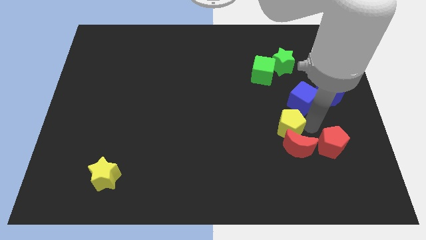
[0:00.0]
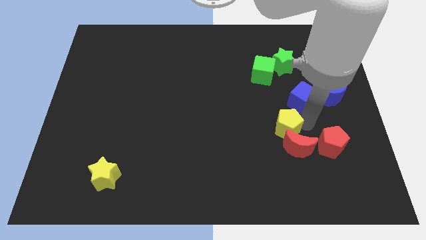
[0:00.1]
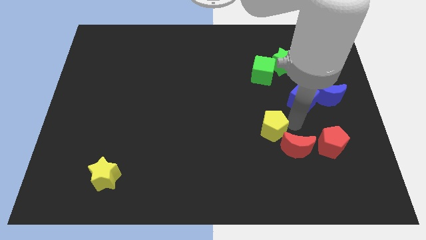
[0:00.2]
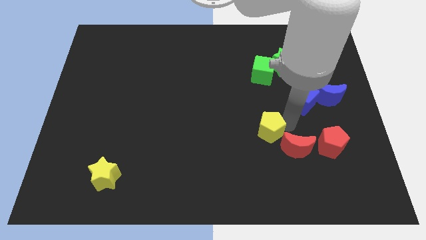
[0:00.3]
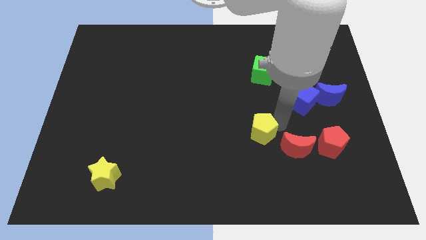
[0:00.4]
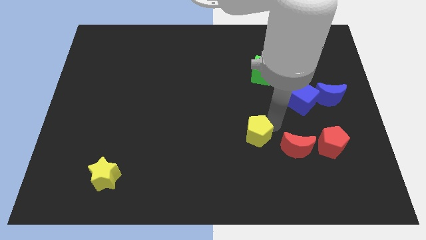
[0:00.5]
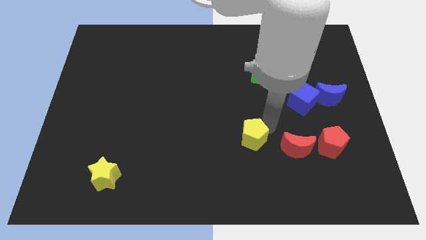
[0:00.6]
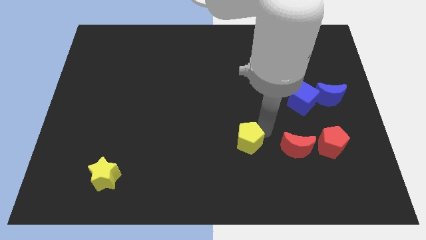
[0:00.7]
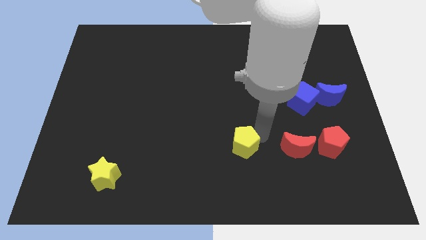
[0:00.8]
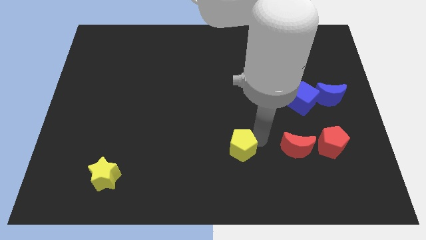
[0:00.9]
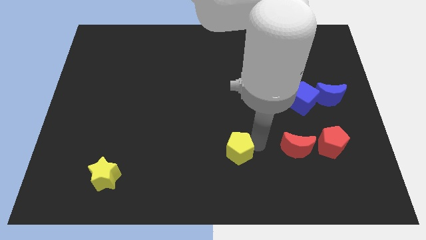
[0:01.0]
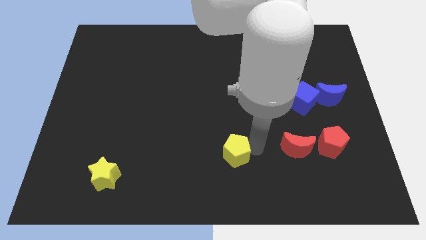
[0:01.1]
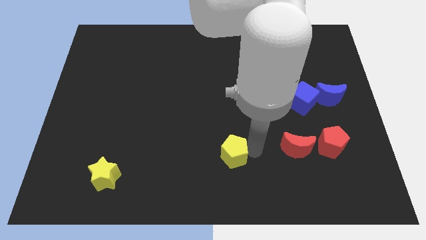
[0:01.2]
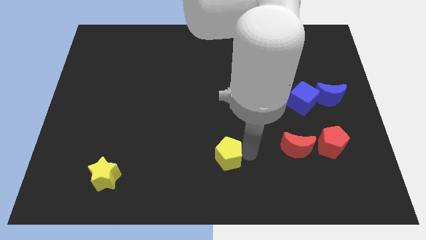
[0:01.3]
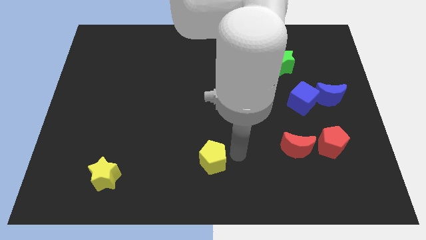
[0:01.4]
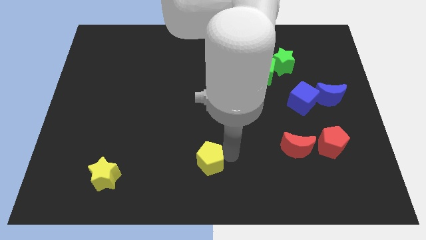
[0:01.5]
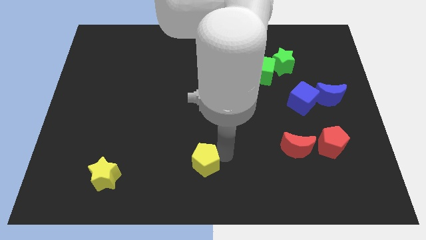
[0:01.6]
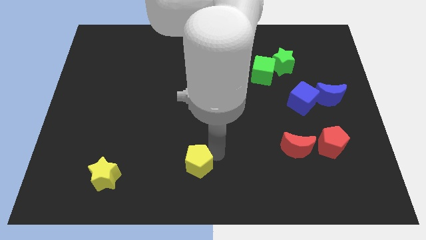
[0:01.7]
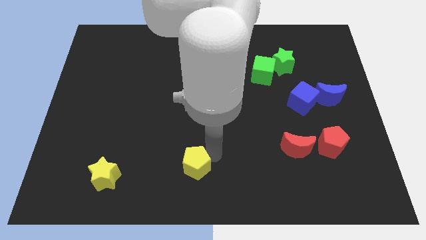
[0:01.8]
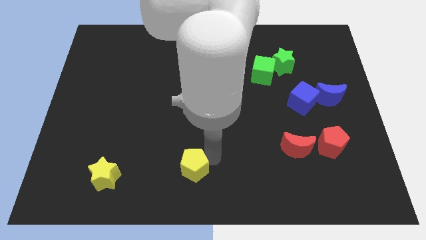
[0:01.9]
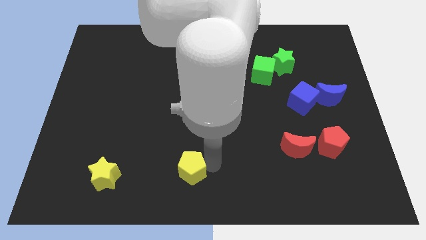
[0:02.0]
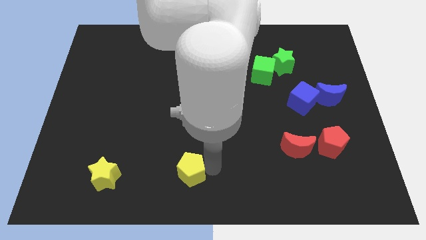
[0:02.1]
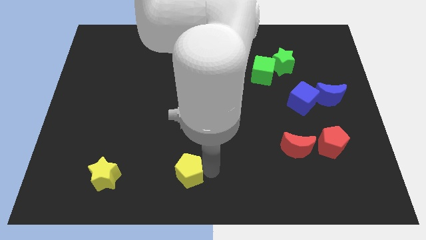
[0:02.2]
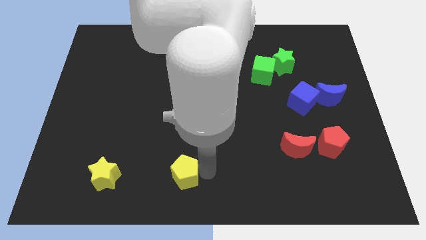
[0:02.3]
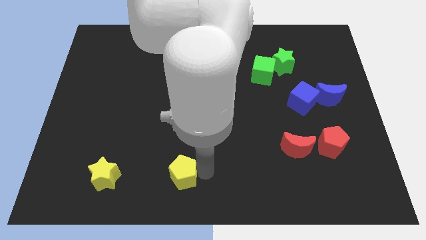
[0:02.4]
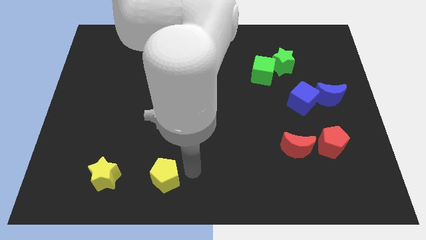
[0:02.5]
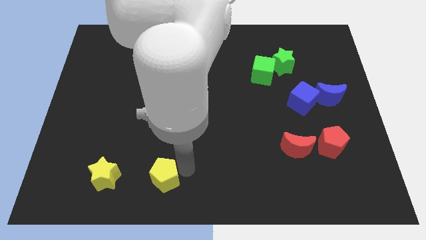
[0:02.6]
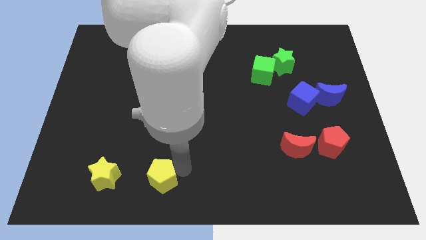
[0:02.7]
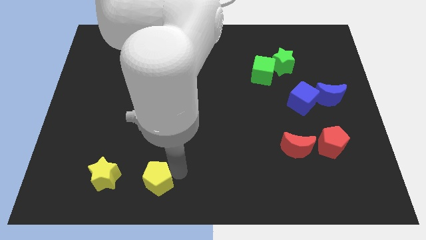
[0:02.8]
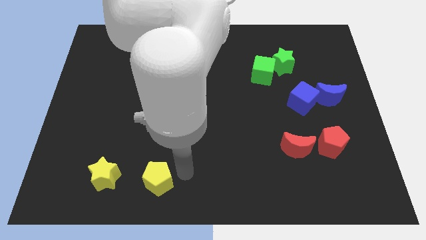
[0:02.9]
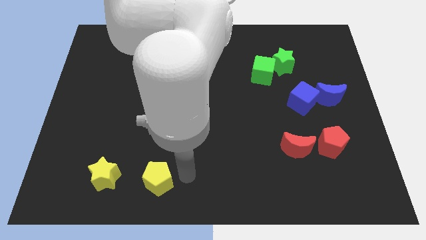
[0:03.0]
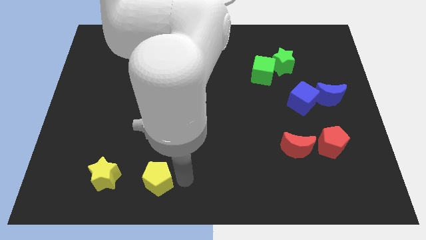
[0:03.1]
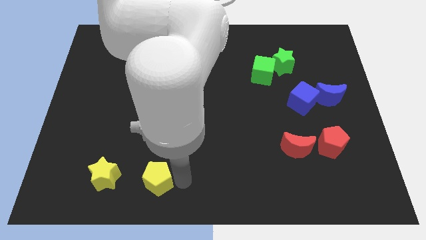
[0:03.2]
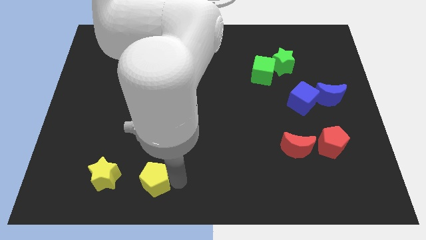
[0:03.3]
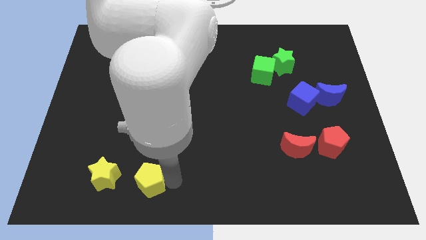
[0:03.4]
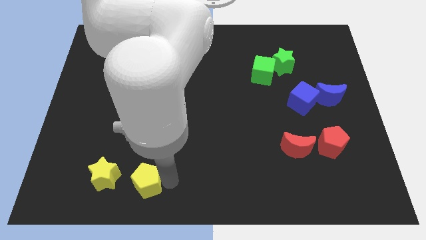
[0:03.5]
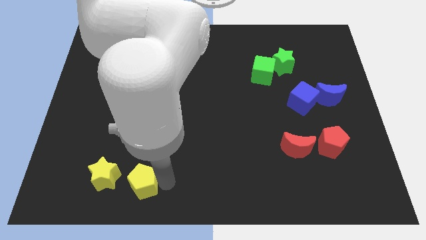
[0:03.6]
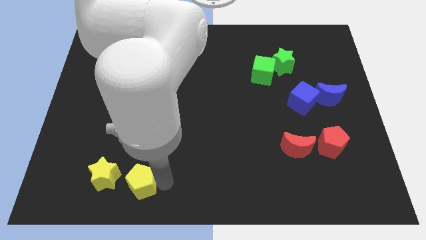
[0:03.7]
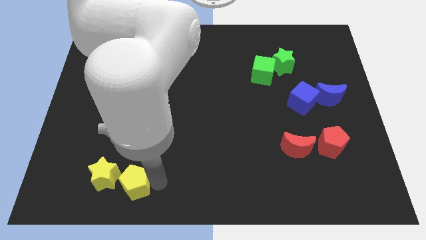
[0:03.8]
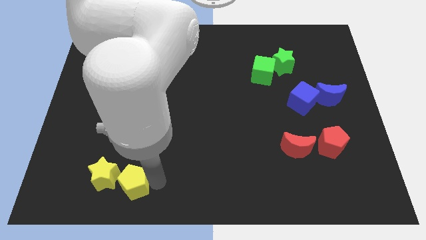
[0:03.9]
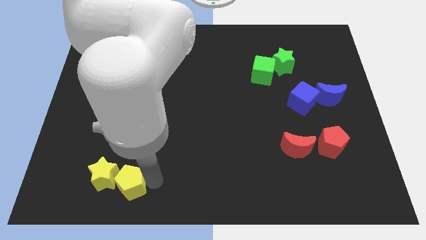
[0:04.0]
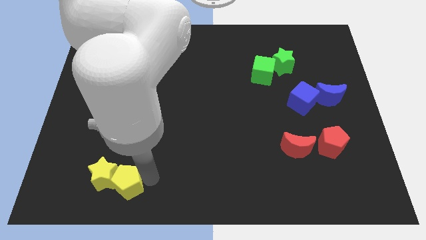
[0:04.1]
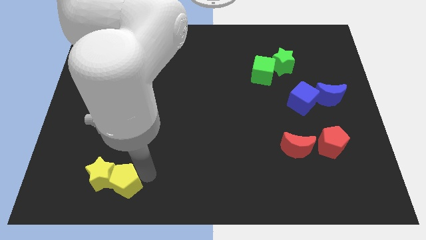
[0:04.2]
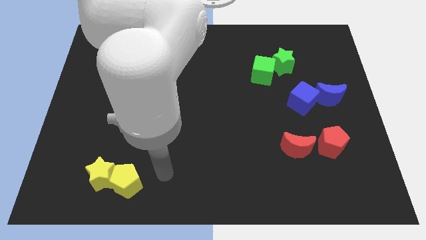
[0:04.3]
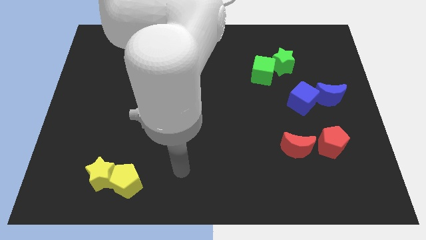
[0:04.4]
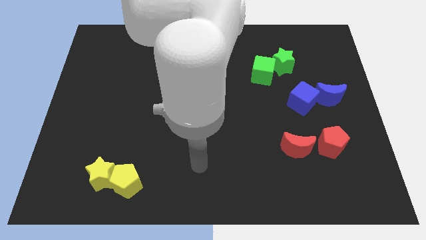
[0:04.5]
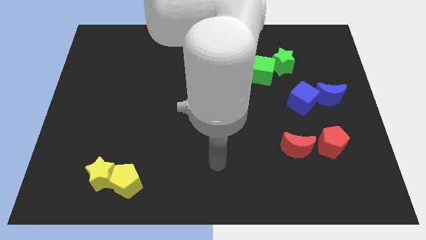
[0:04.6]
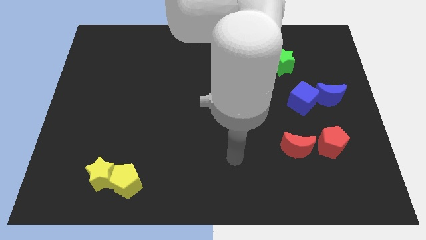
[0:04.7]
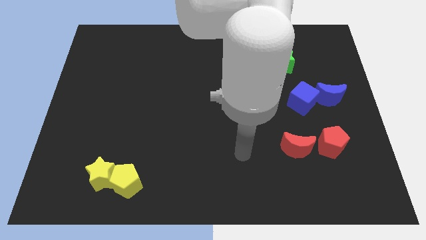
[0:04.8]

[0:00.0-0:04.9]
slide the yellow pentagon into the yellow star

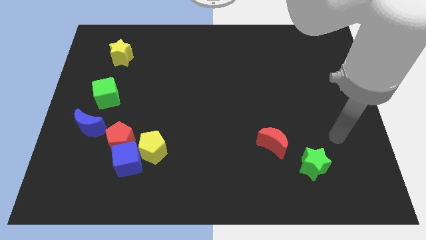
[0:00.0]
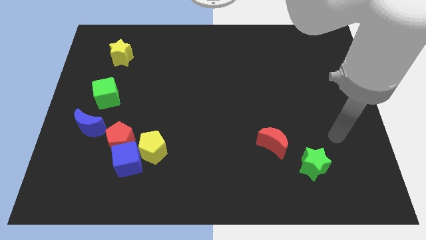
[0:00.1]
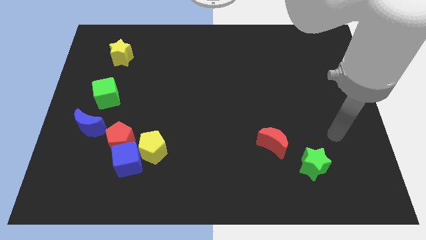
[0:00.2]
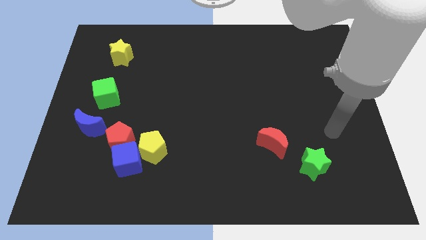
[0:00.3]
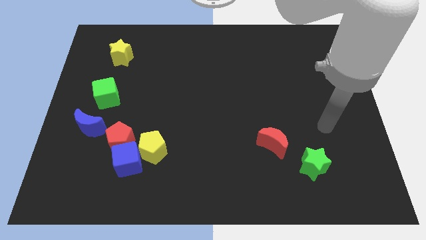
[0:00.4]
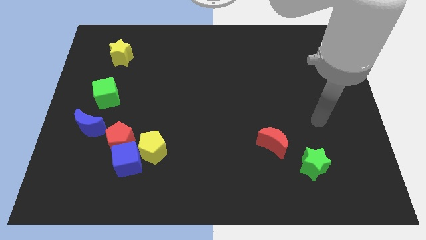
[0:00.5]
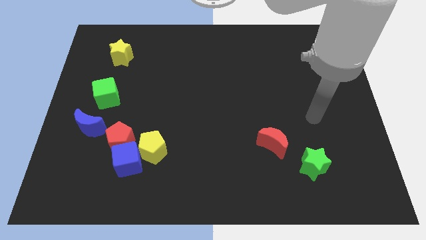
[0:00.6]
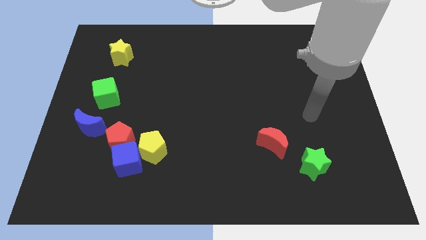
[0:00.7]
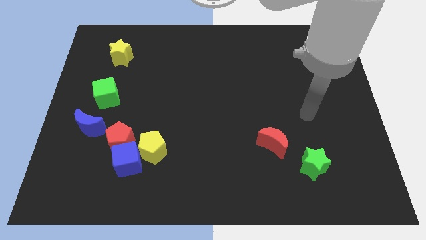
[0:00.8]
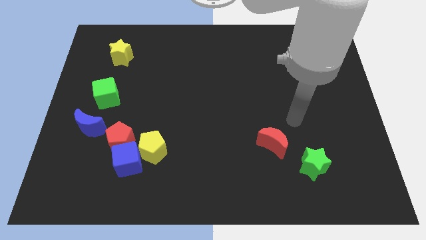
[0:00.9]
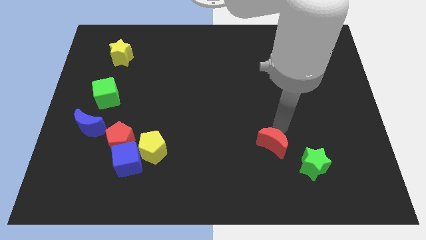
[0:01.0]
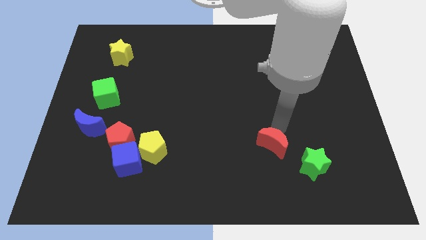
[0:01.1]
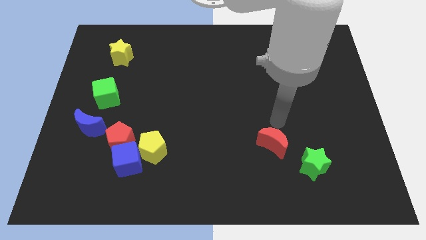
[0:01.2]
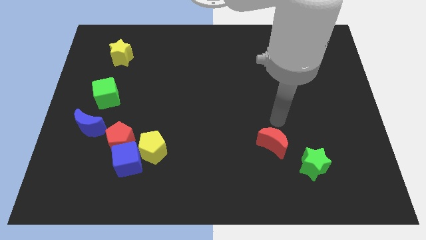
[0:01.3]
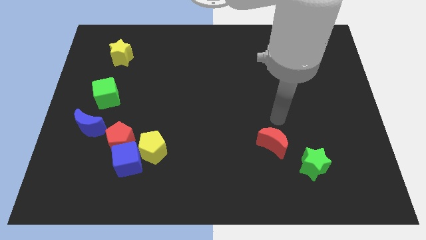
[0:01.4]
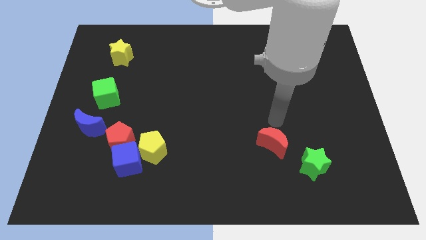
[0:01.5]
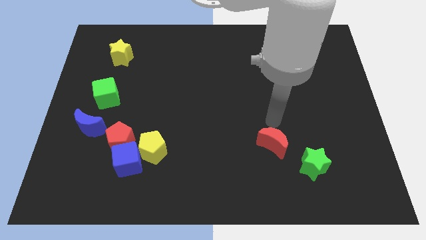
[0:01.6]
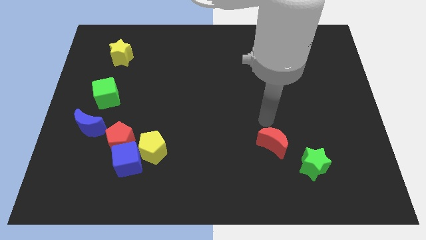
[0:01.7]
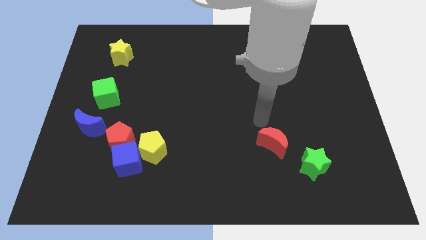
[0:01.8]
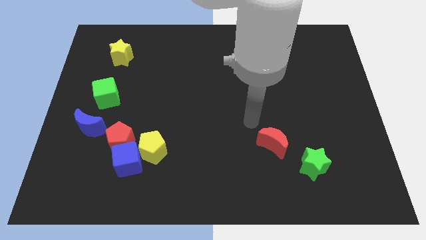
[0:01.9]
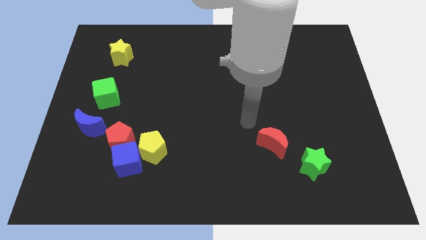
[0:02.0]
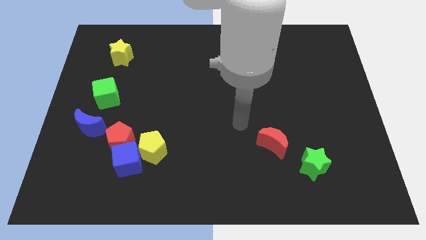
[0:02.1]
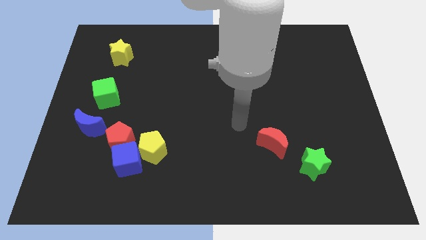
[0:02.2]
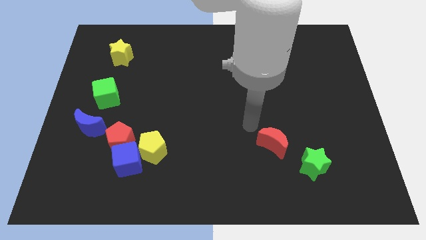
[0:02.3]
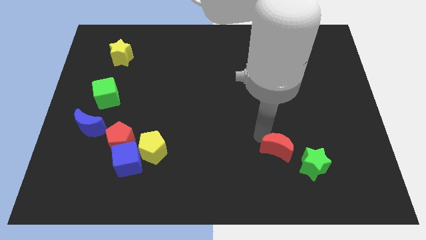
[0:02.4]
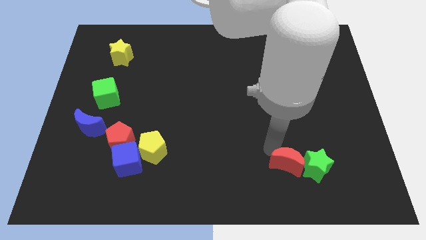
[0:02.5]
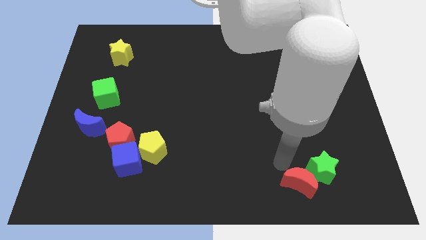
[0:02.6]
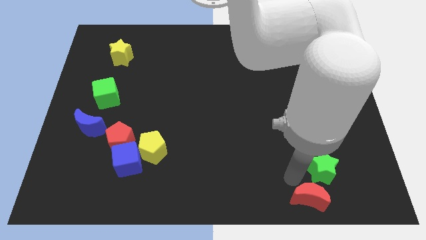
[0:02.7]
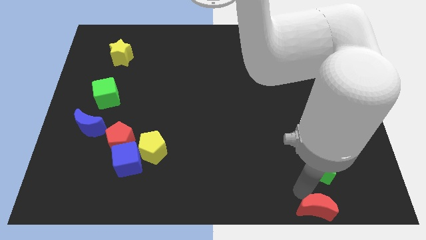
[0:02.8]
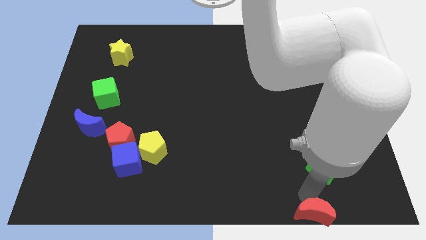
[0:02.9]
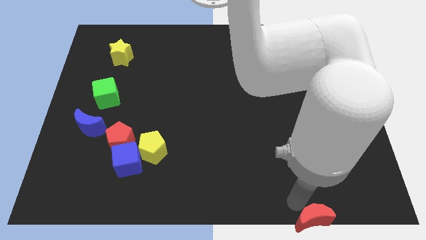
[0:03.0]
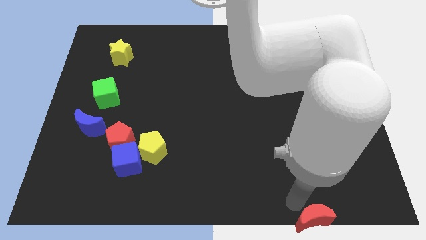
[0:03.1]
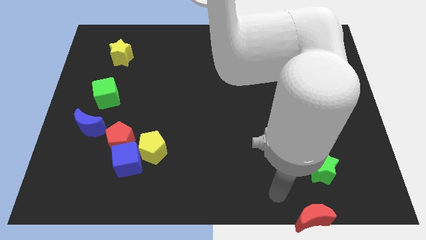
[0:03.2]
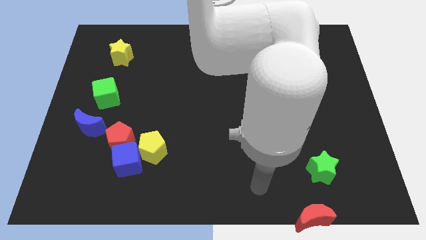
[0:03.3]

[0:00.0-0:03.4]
move the red crescent below the green star

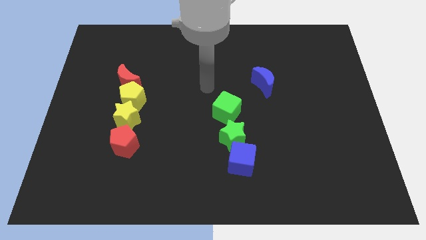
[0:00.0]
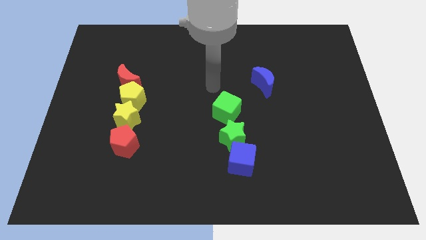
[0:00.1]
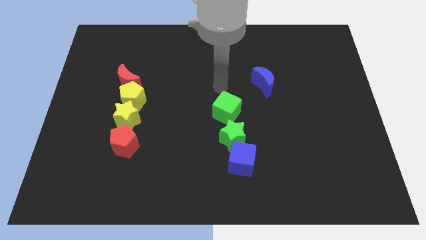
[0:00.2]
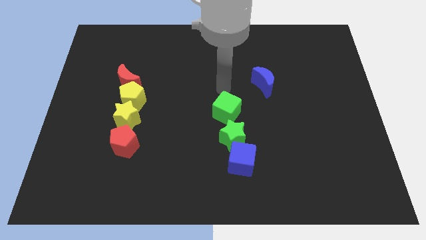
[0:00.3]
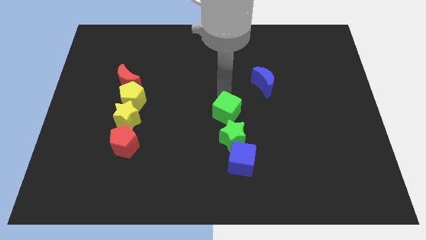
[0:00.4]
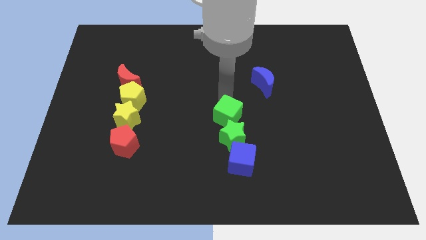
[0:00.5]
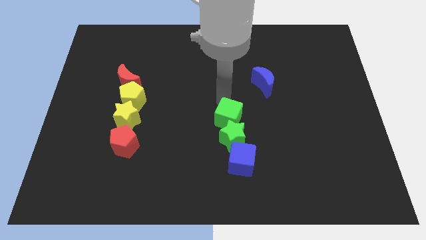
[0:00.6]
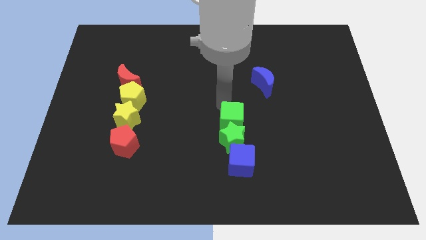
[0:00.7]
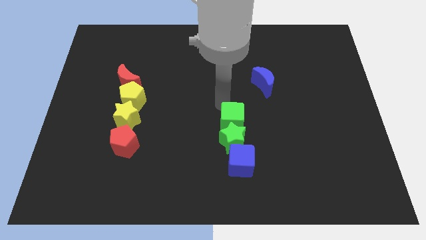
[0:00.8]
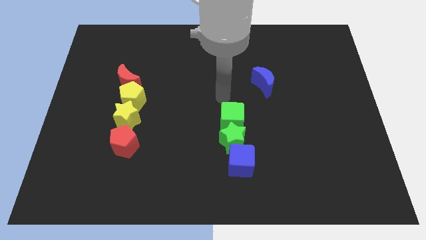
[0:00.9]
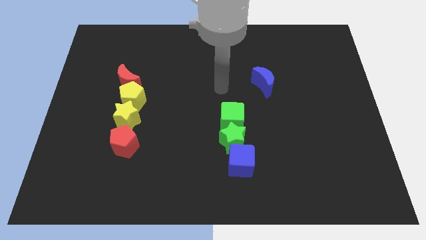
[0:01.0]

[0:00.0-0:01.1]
push the green cube into the green star
